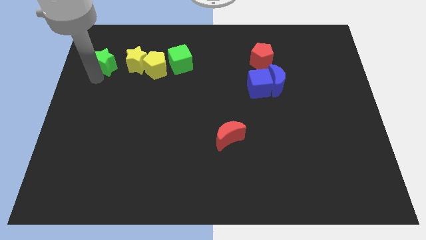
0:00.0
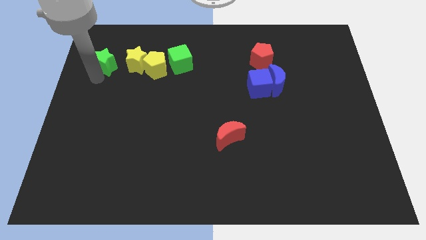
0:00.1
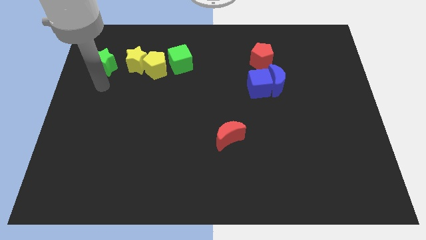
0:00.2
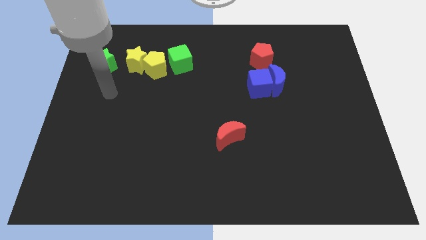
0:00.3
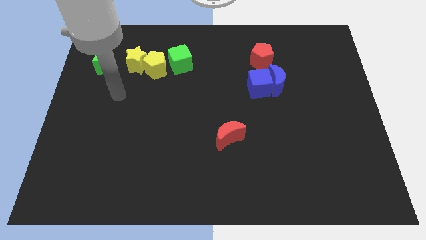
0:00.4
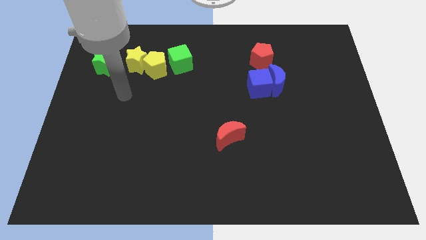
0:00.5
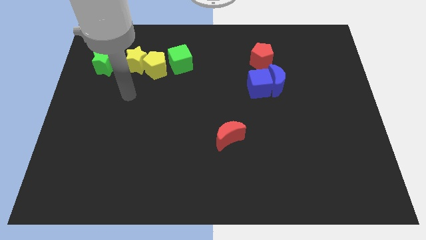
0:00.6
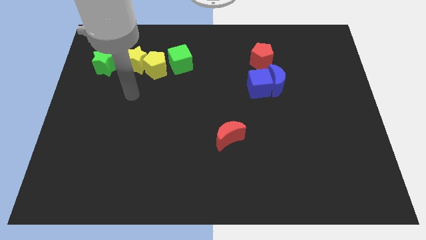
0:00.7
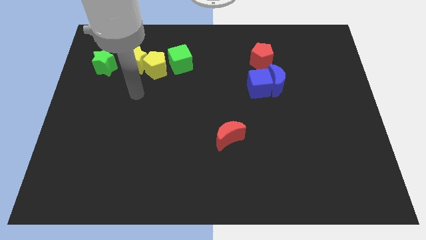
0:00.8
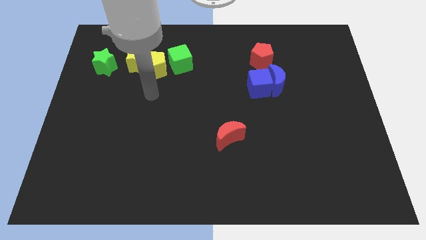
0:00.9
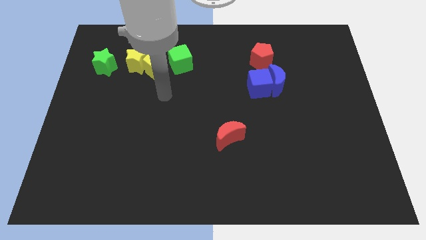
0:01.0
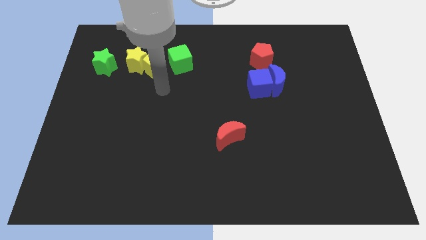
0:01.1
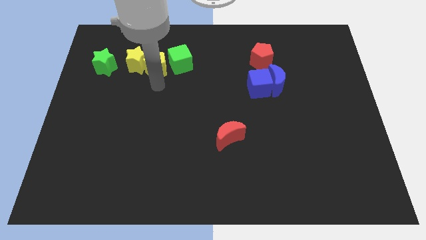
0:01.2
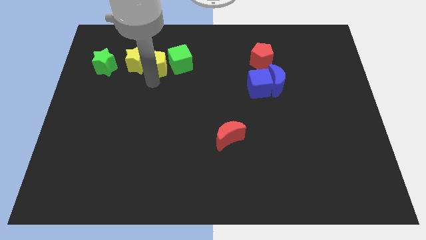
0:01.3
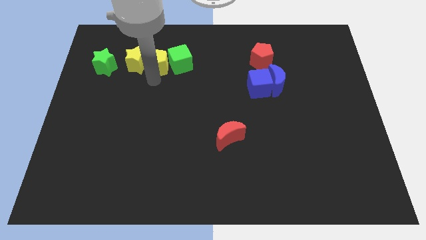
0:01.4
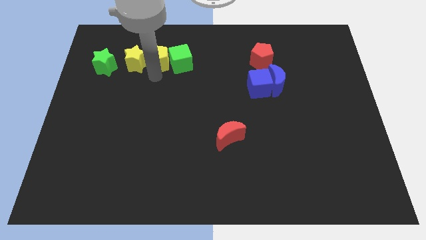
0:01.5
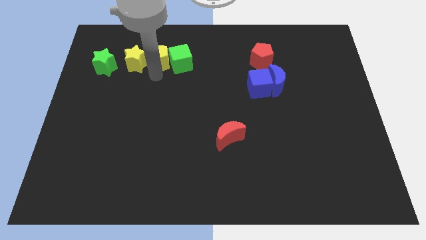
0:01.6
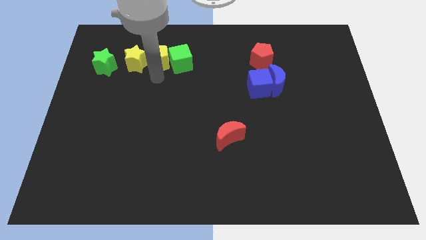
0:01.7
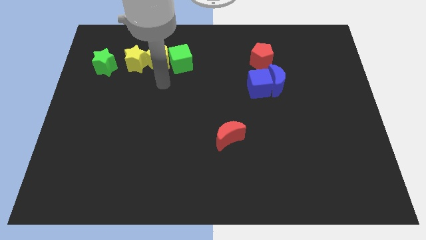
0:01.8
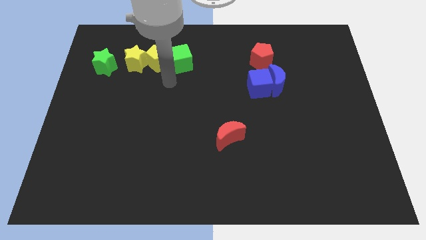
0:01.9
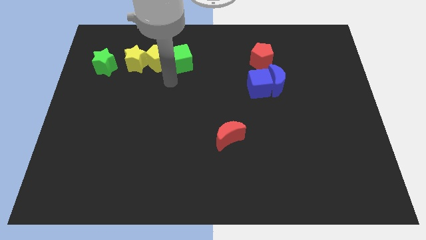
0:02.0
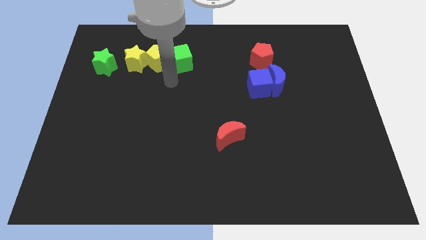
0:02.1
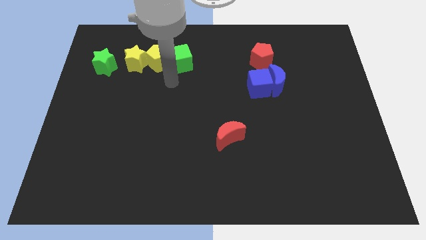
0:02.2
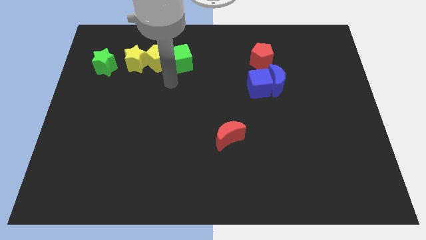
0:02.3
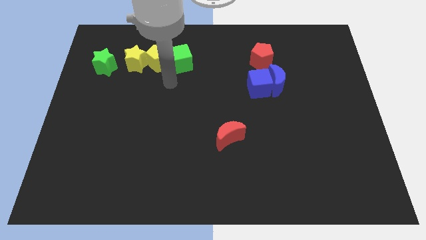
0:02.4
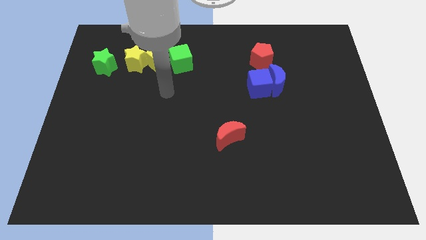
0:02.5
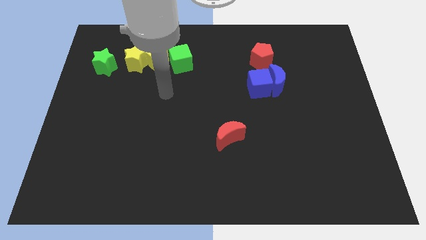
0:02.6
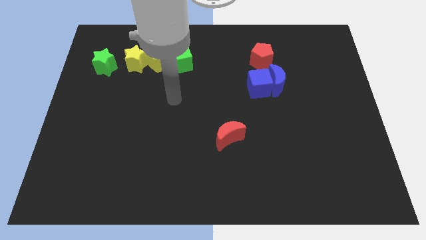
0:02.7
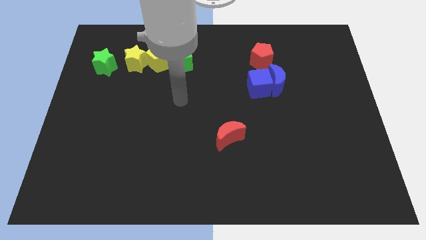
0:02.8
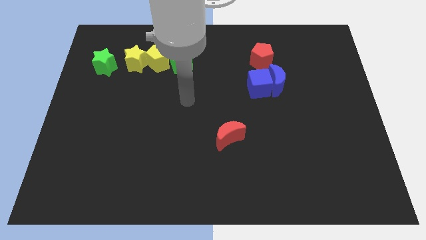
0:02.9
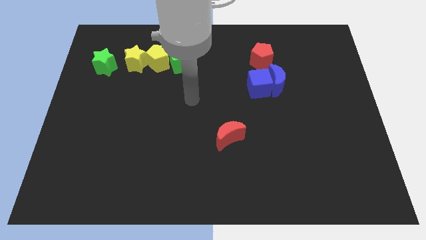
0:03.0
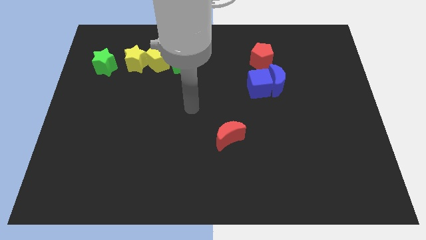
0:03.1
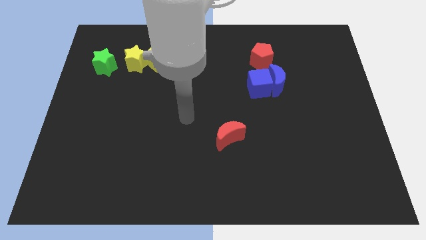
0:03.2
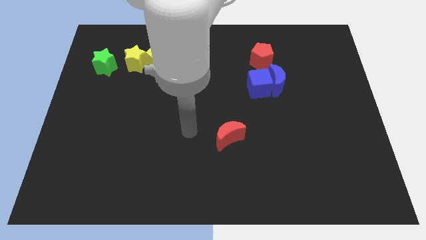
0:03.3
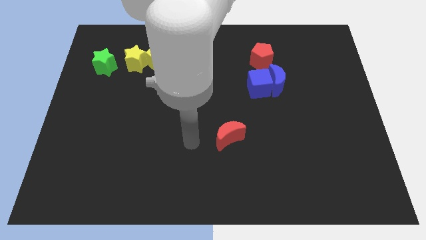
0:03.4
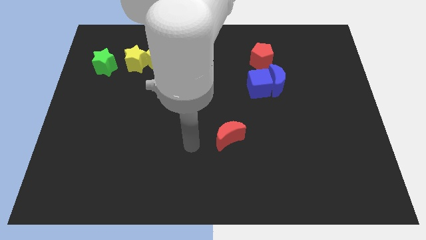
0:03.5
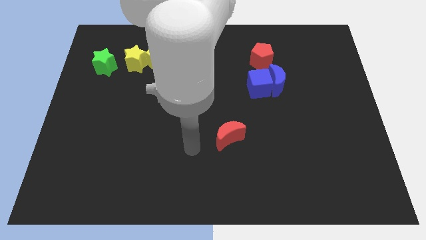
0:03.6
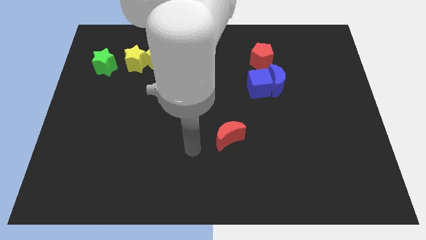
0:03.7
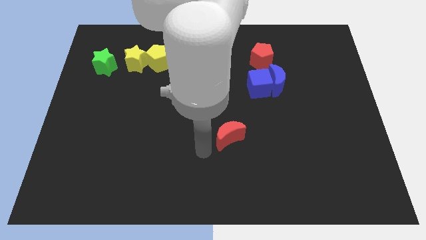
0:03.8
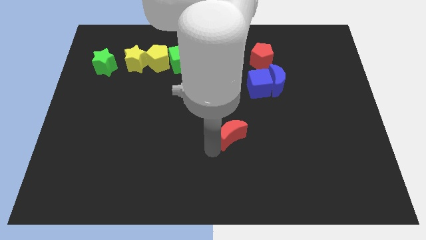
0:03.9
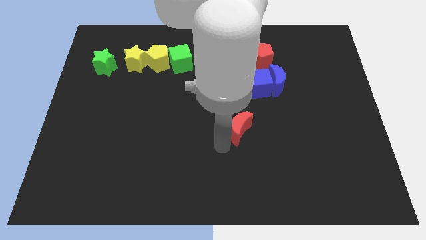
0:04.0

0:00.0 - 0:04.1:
move the yellow pentagon slightly to the top

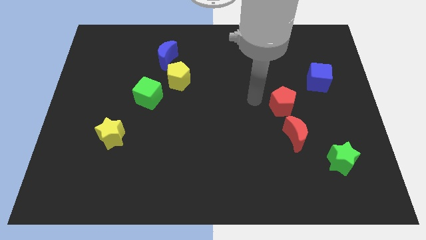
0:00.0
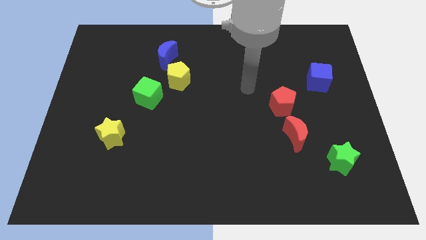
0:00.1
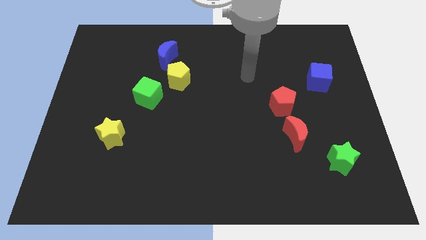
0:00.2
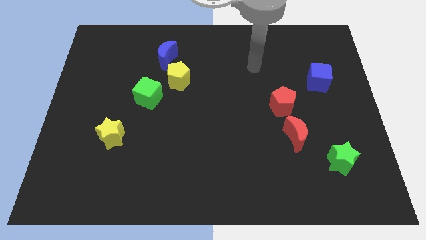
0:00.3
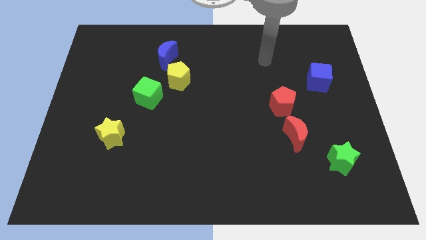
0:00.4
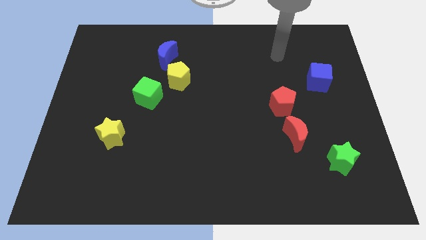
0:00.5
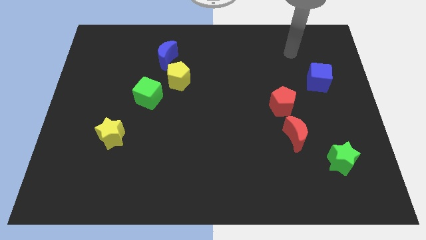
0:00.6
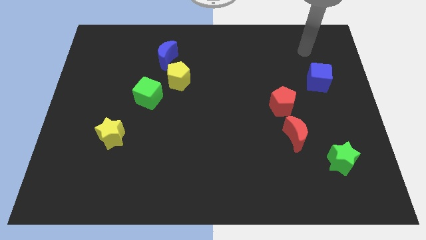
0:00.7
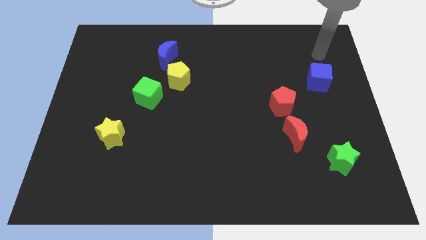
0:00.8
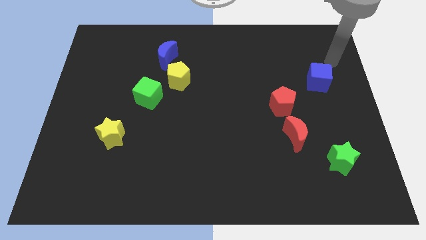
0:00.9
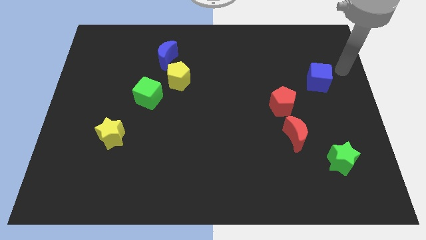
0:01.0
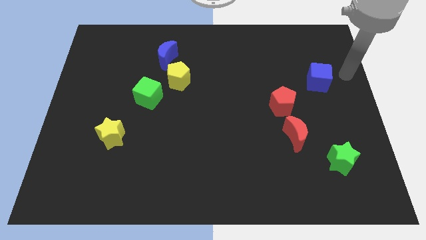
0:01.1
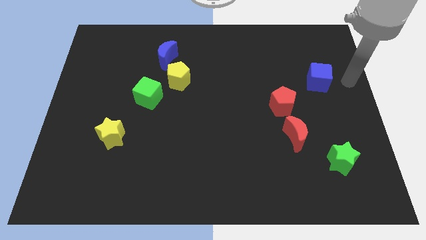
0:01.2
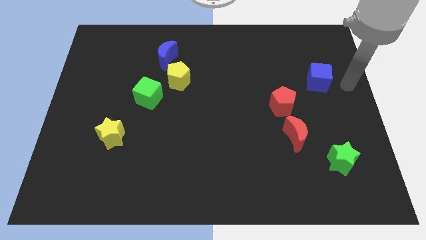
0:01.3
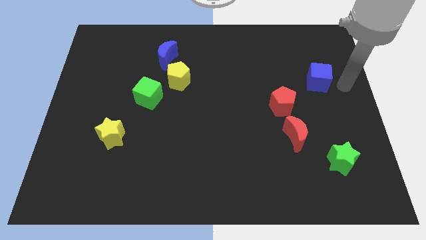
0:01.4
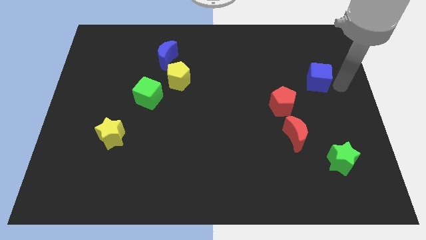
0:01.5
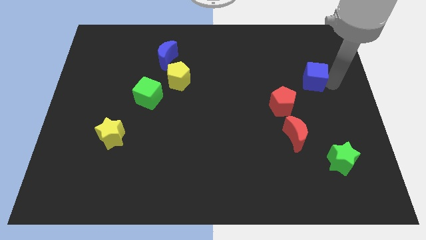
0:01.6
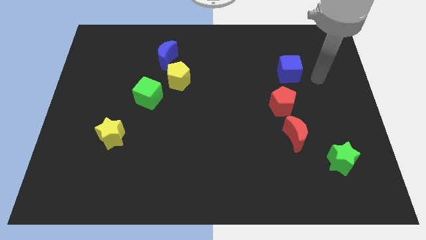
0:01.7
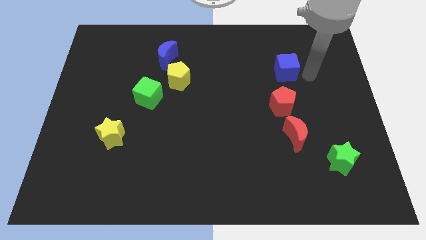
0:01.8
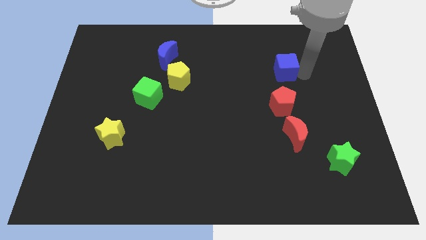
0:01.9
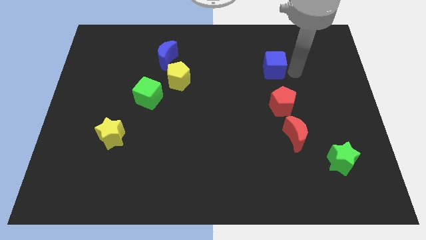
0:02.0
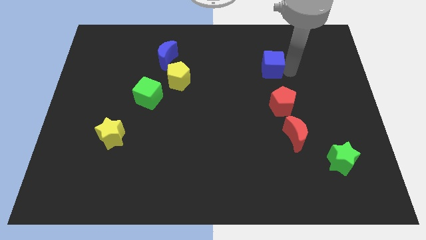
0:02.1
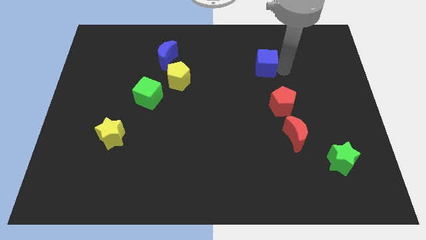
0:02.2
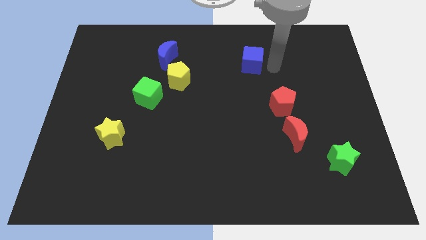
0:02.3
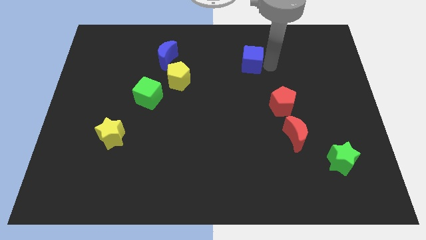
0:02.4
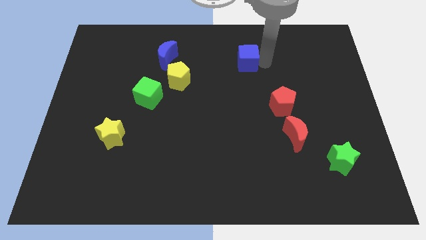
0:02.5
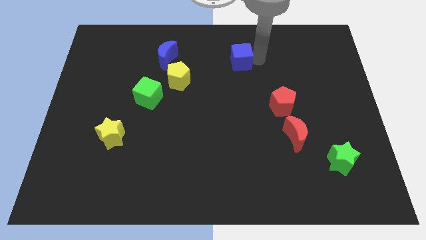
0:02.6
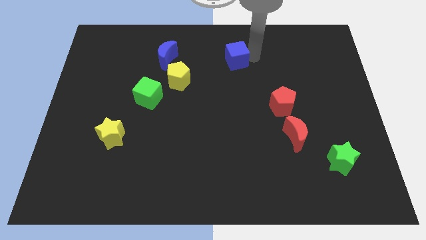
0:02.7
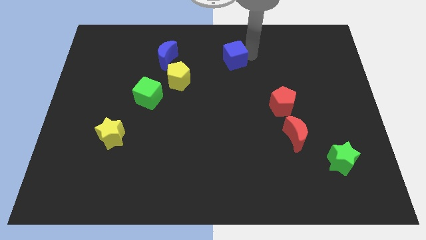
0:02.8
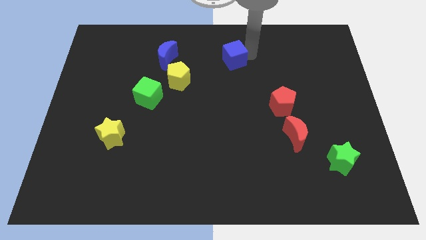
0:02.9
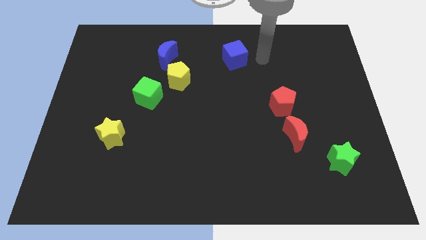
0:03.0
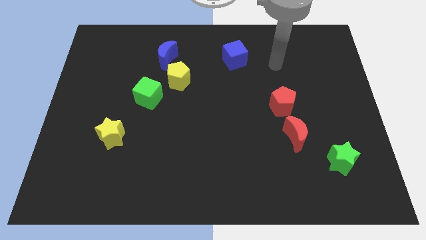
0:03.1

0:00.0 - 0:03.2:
slide blue cube diagonally top left to the red pentagon

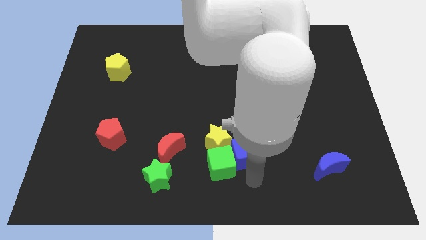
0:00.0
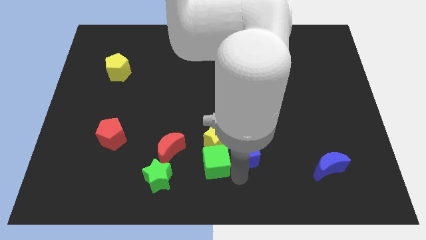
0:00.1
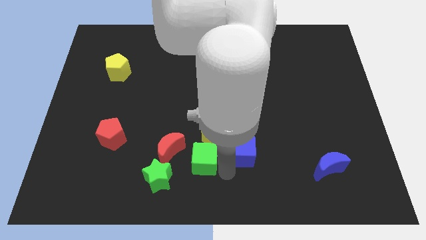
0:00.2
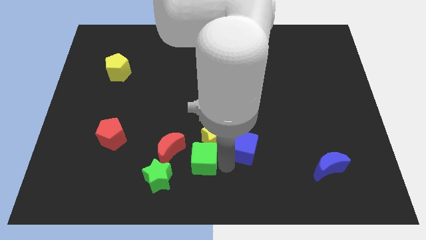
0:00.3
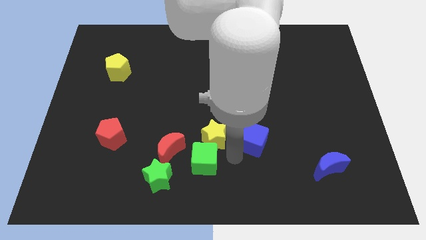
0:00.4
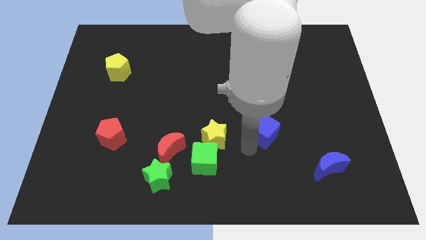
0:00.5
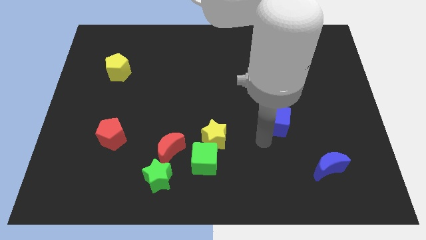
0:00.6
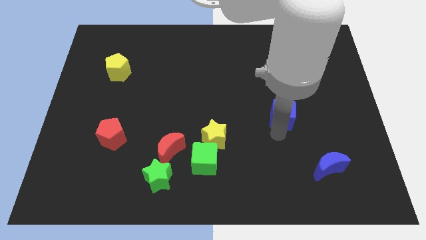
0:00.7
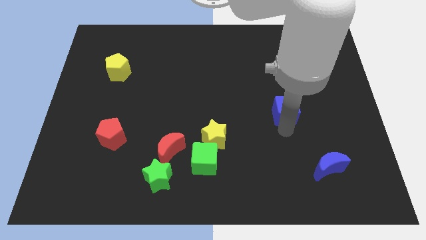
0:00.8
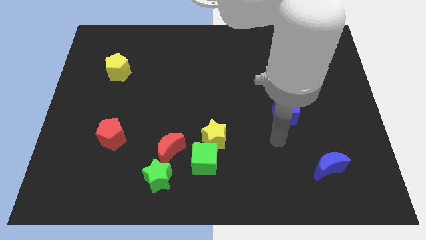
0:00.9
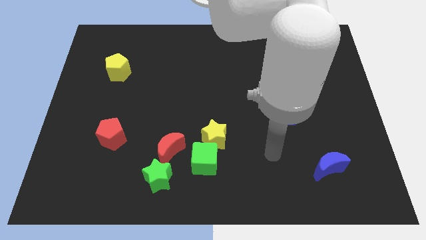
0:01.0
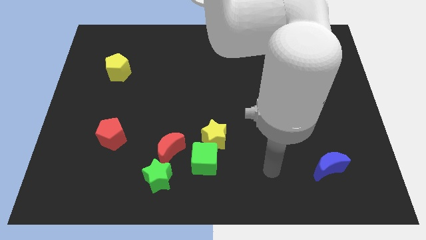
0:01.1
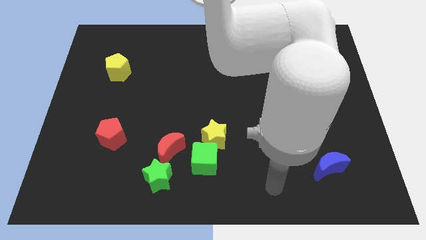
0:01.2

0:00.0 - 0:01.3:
move the blue cube parallel to the blue crescent

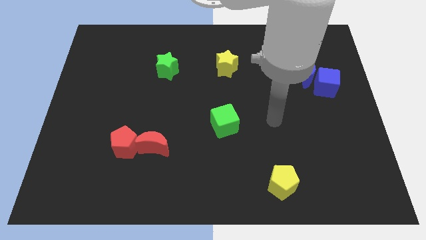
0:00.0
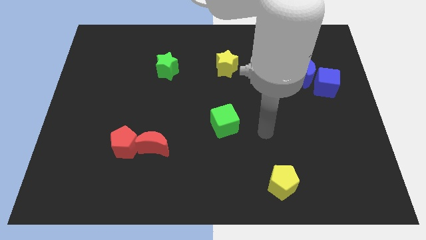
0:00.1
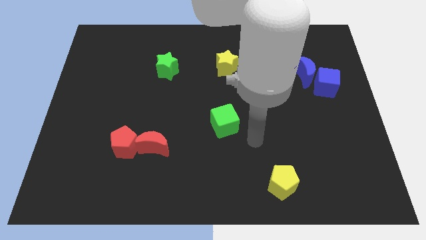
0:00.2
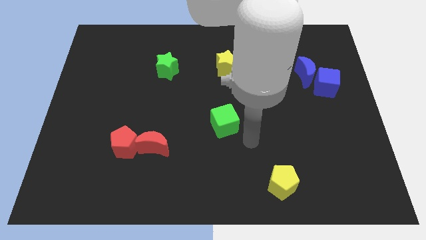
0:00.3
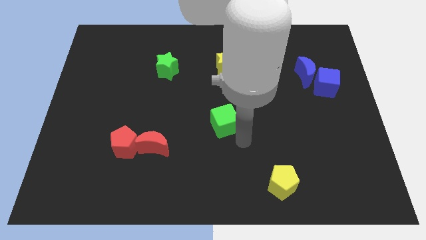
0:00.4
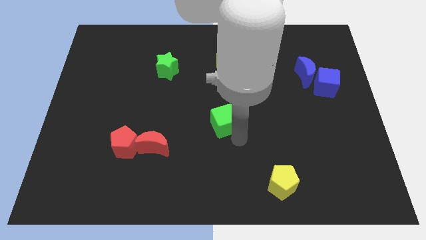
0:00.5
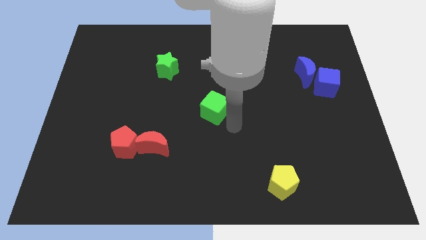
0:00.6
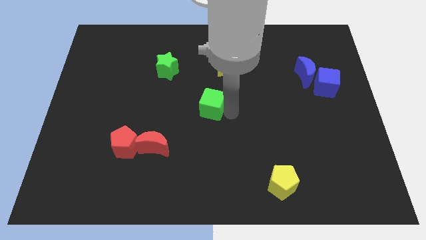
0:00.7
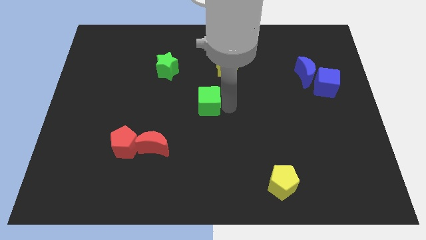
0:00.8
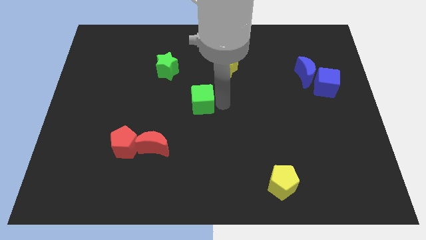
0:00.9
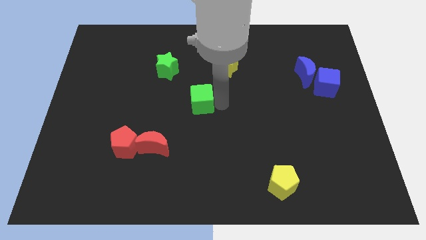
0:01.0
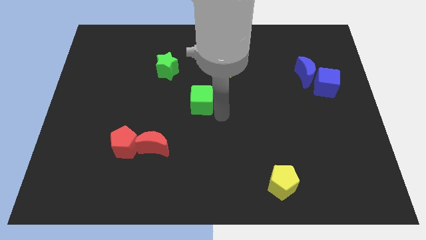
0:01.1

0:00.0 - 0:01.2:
move green cube diagonal to the yellow star
